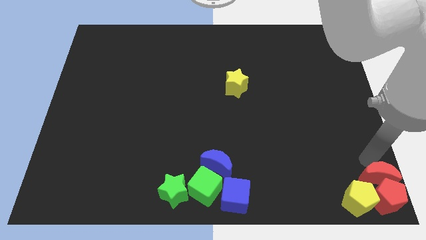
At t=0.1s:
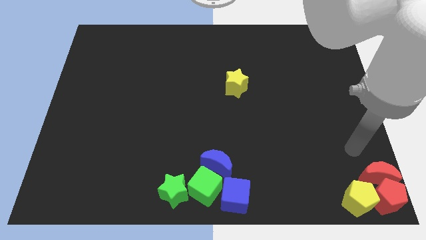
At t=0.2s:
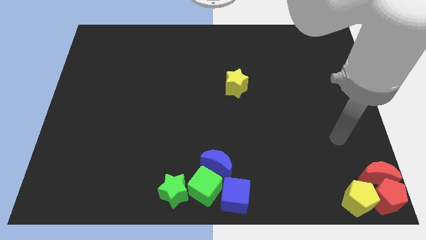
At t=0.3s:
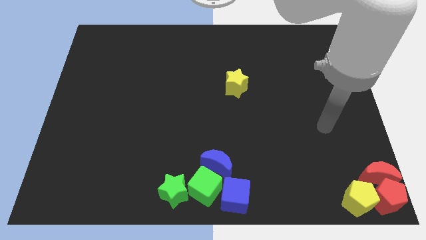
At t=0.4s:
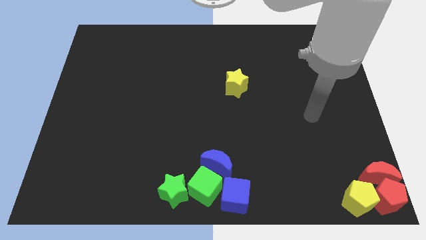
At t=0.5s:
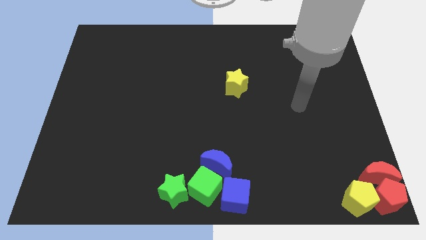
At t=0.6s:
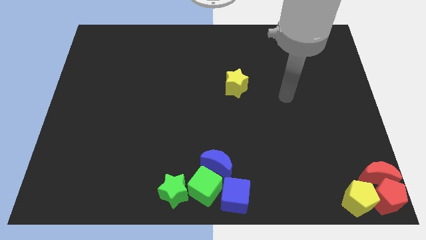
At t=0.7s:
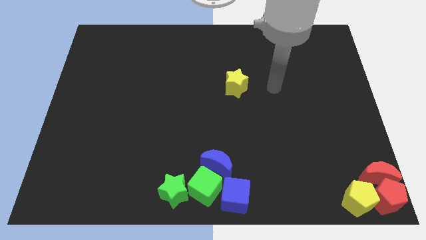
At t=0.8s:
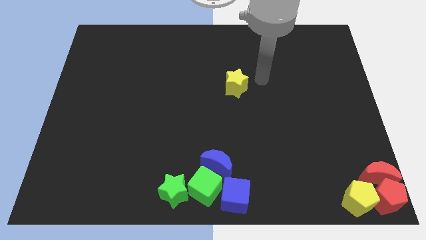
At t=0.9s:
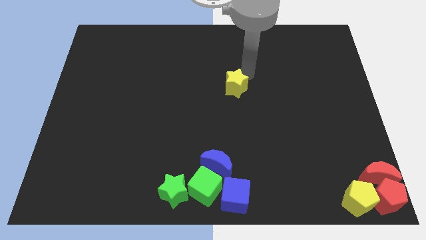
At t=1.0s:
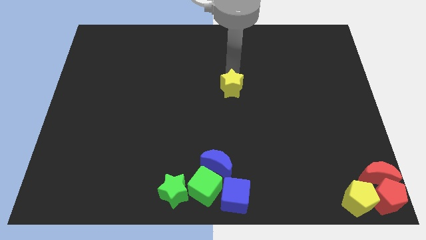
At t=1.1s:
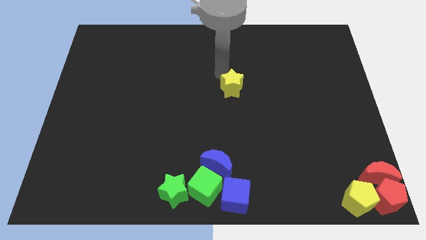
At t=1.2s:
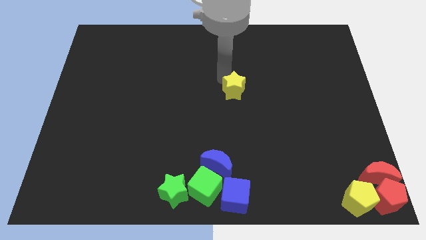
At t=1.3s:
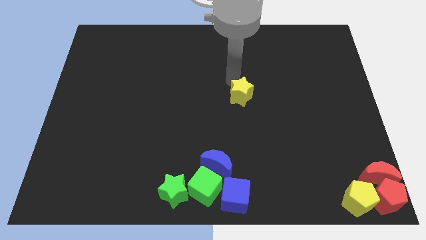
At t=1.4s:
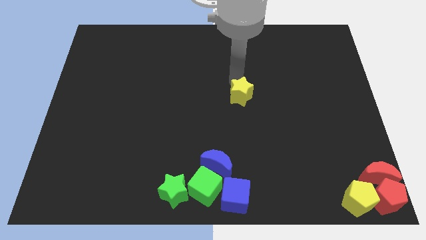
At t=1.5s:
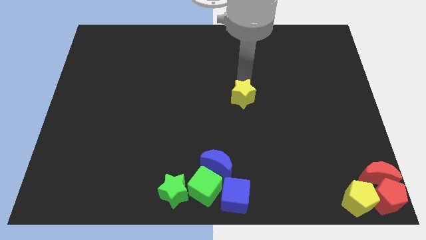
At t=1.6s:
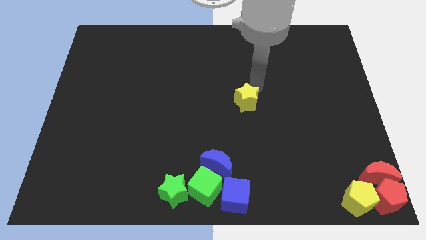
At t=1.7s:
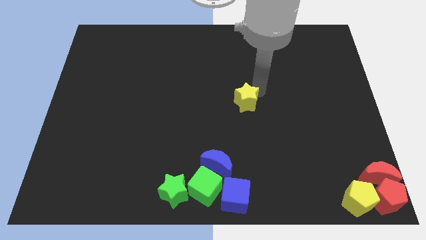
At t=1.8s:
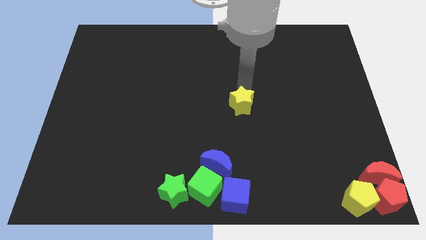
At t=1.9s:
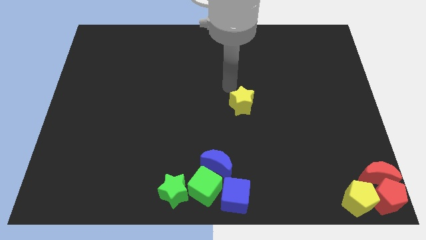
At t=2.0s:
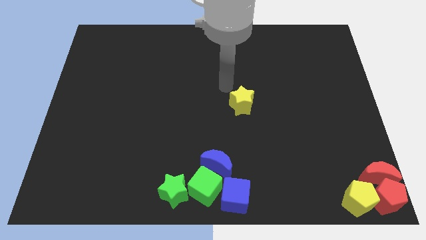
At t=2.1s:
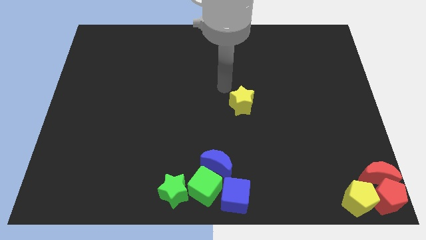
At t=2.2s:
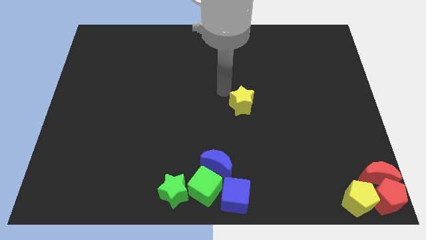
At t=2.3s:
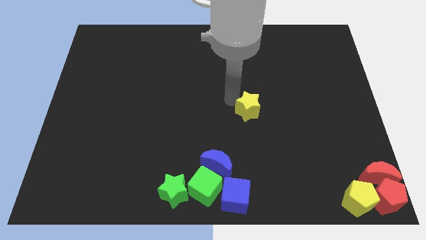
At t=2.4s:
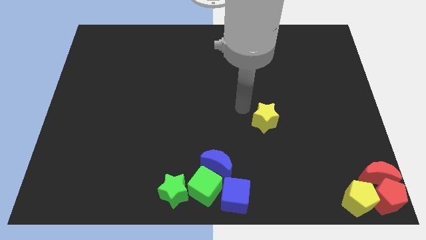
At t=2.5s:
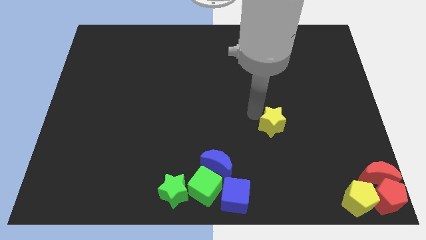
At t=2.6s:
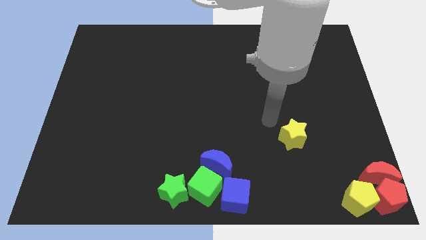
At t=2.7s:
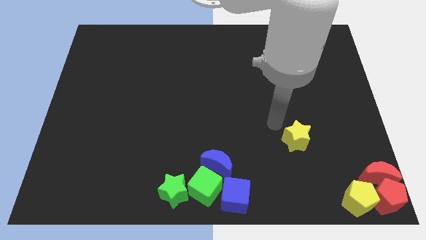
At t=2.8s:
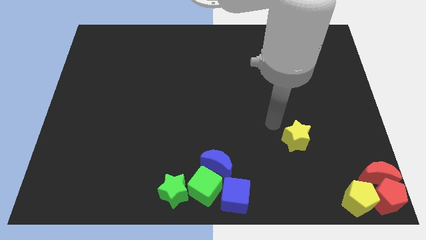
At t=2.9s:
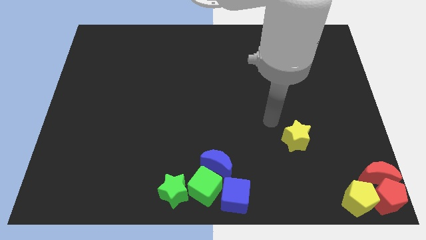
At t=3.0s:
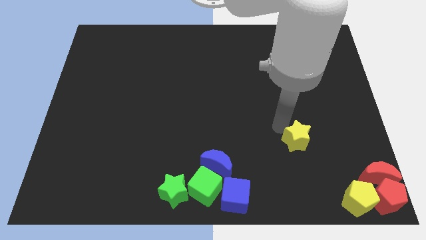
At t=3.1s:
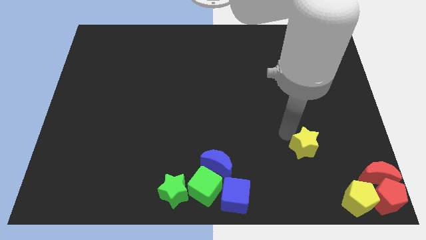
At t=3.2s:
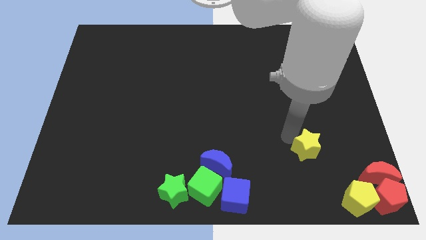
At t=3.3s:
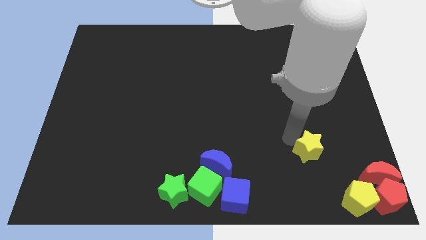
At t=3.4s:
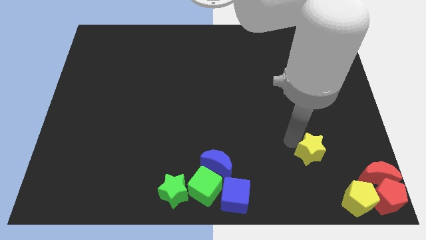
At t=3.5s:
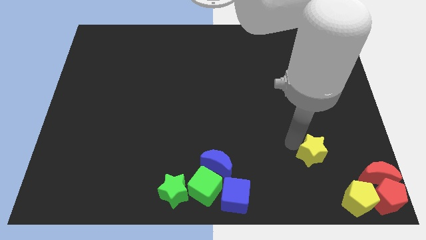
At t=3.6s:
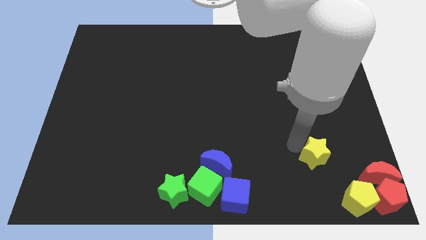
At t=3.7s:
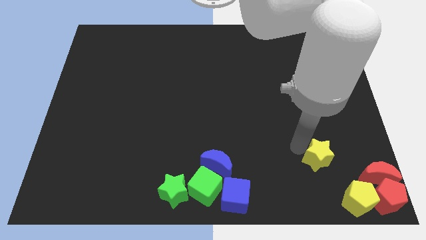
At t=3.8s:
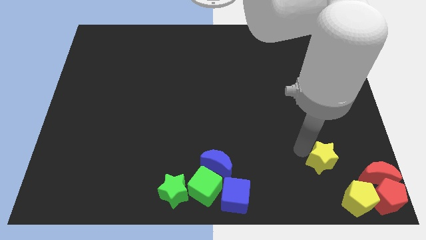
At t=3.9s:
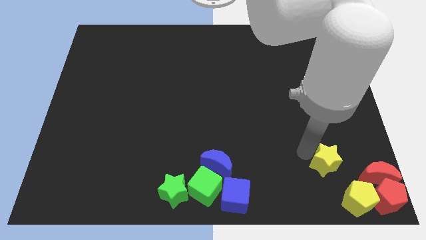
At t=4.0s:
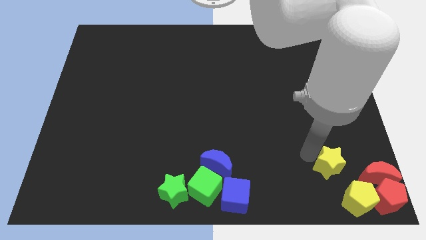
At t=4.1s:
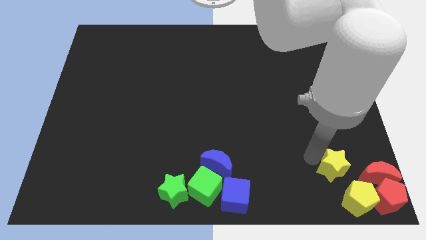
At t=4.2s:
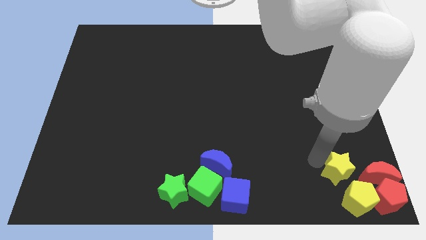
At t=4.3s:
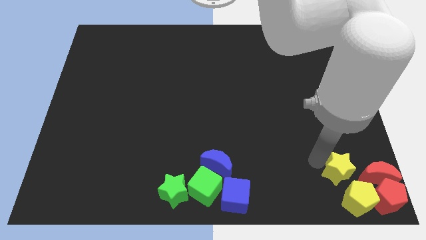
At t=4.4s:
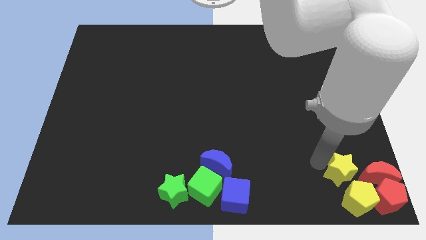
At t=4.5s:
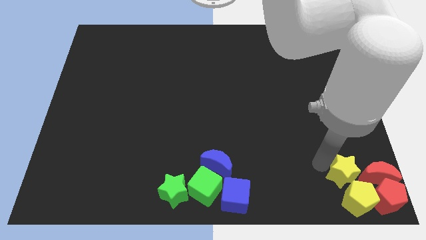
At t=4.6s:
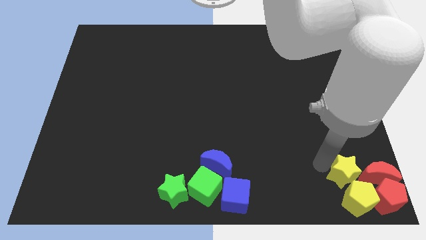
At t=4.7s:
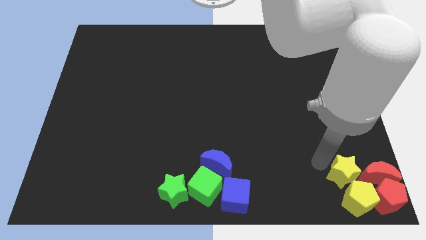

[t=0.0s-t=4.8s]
drag the yellow star close to the group of blocks

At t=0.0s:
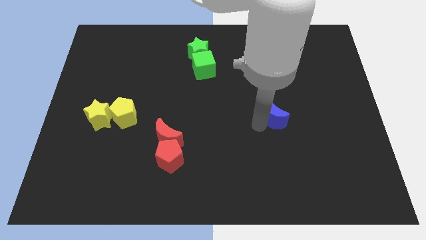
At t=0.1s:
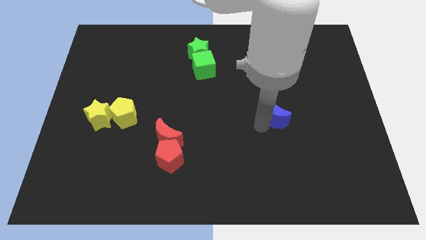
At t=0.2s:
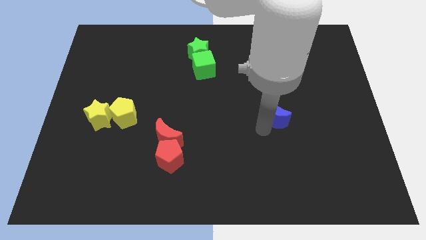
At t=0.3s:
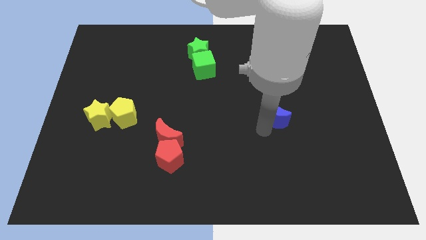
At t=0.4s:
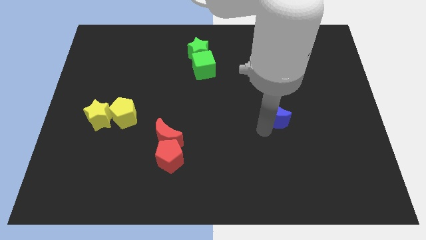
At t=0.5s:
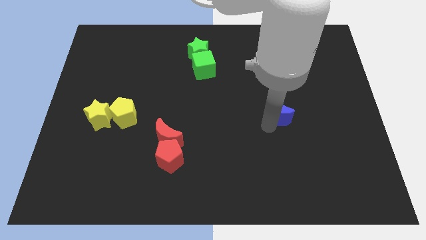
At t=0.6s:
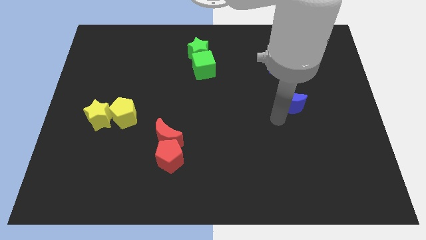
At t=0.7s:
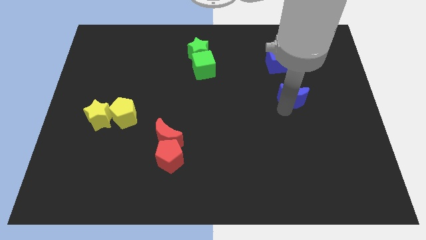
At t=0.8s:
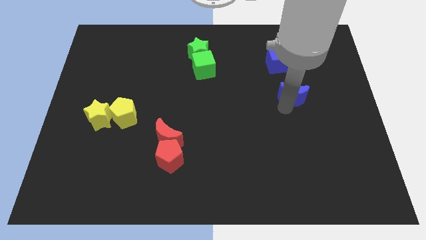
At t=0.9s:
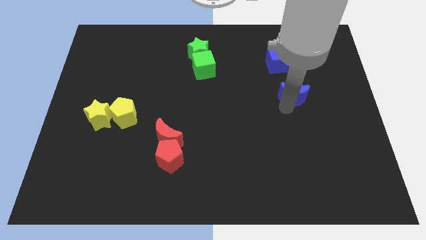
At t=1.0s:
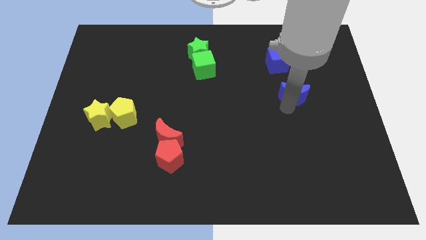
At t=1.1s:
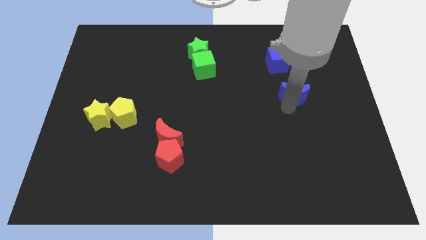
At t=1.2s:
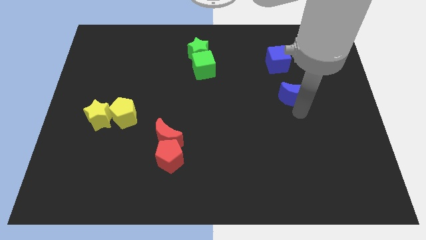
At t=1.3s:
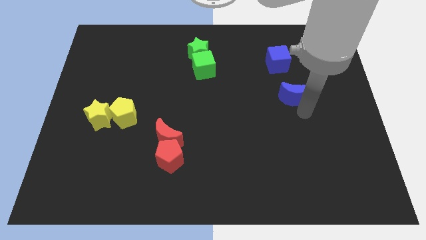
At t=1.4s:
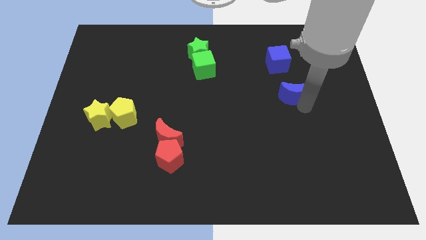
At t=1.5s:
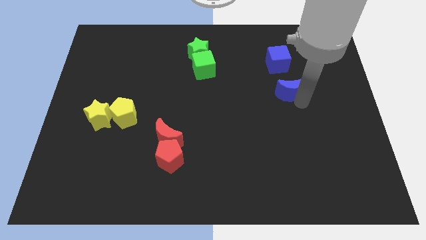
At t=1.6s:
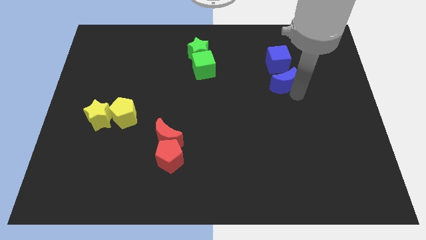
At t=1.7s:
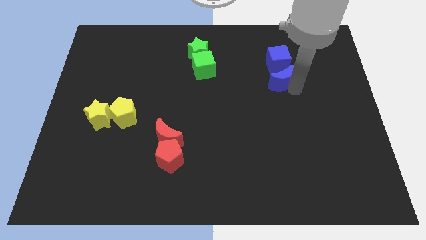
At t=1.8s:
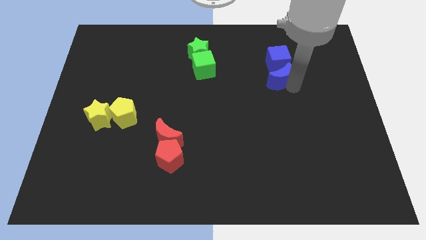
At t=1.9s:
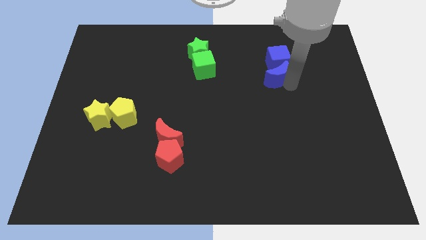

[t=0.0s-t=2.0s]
place the blue moon below the blue cube

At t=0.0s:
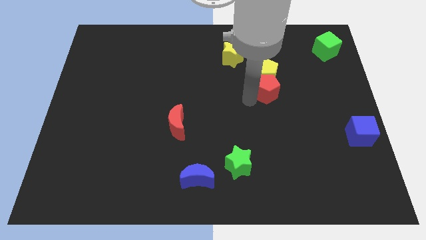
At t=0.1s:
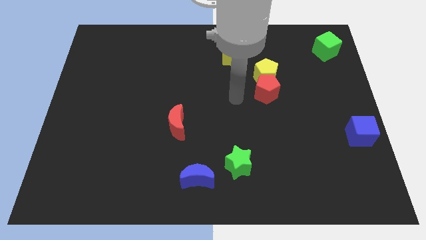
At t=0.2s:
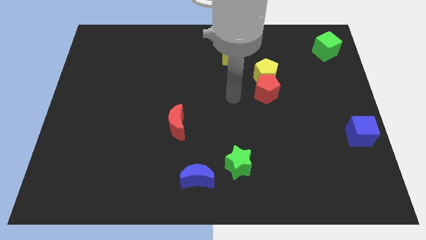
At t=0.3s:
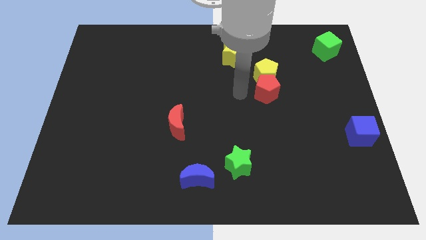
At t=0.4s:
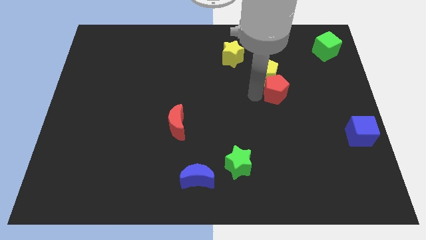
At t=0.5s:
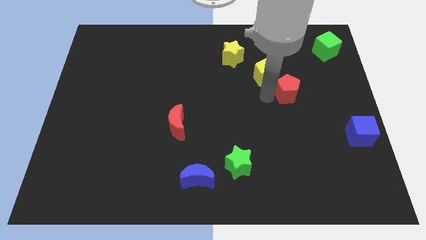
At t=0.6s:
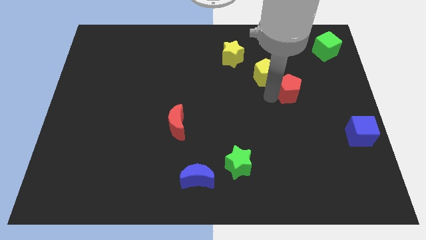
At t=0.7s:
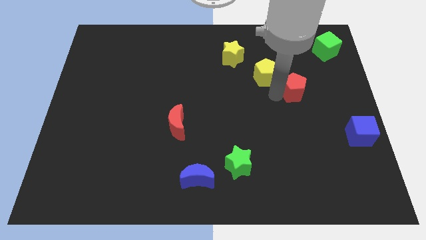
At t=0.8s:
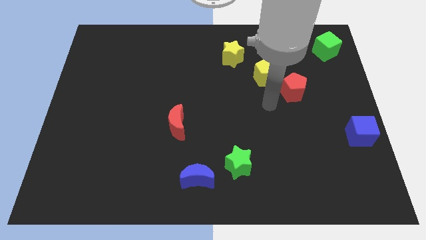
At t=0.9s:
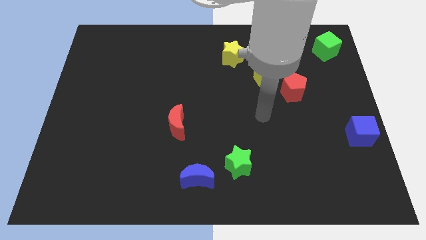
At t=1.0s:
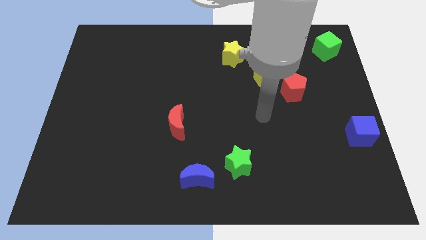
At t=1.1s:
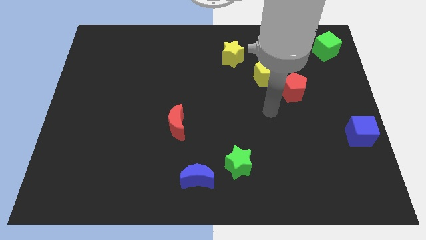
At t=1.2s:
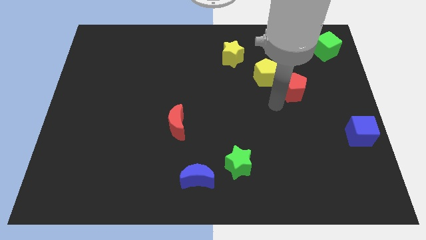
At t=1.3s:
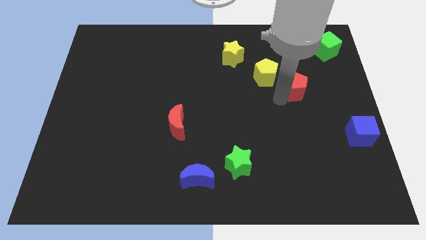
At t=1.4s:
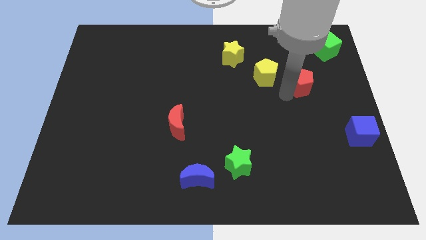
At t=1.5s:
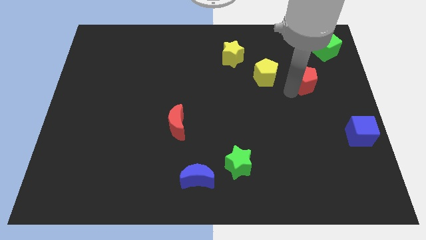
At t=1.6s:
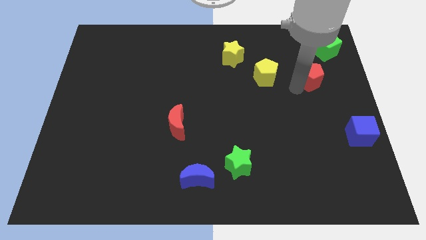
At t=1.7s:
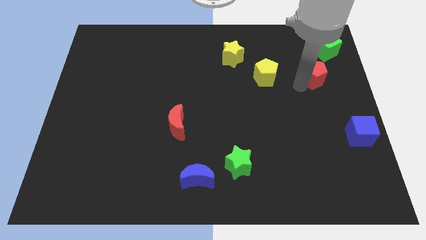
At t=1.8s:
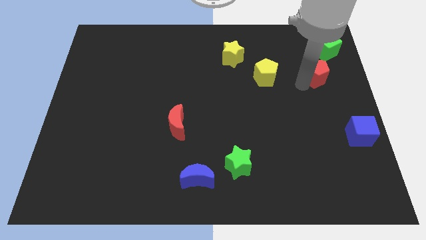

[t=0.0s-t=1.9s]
move the red pentagon close to the green cube
